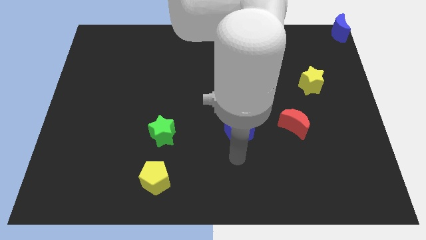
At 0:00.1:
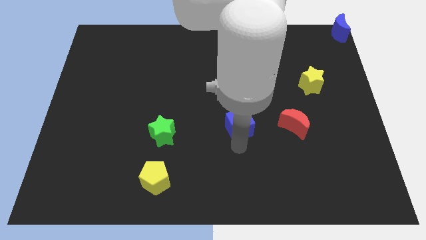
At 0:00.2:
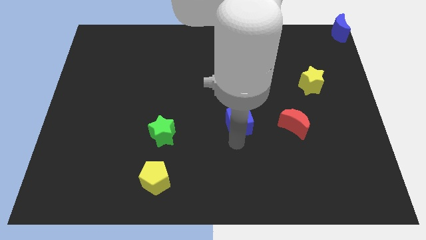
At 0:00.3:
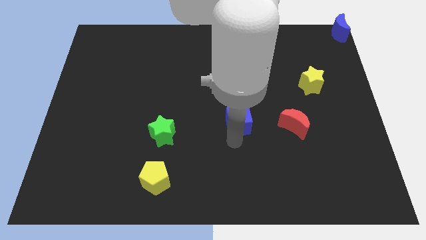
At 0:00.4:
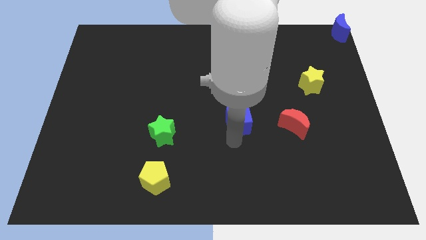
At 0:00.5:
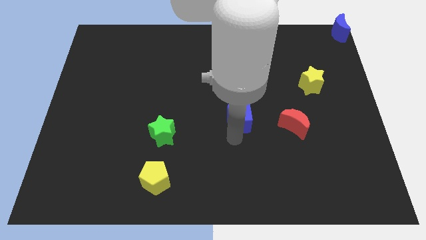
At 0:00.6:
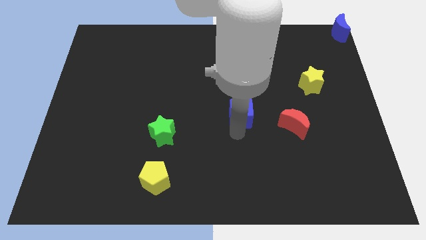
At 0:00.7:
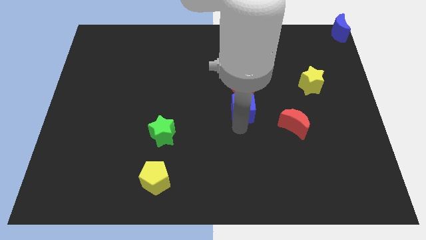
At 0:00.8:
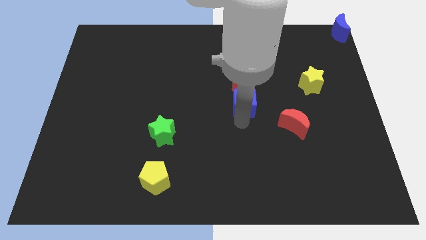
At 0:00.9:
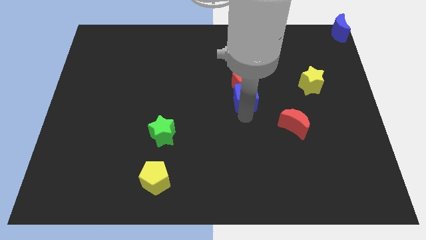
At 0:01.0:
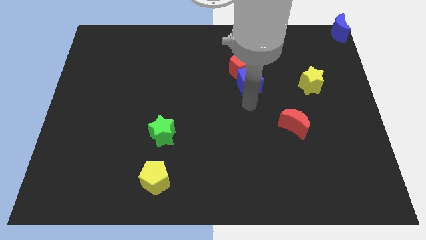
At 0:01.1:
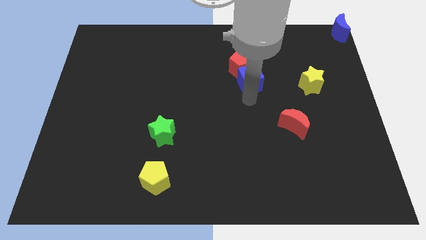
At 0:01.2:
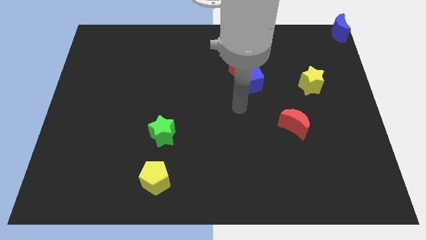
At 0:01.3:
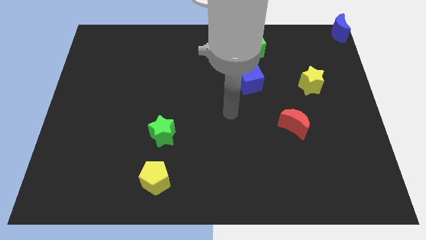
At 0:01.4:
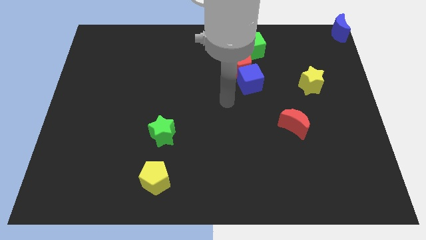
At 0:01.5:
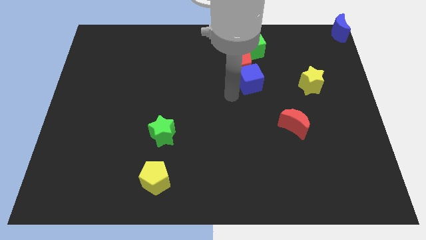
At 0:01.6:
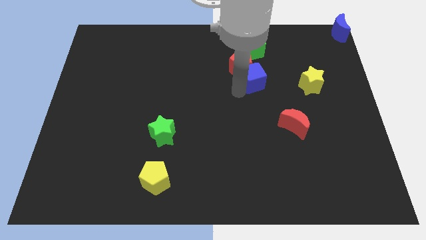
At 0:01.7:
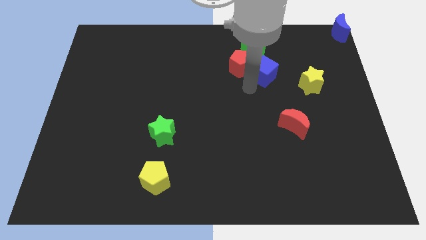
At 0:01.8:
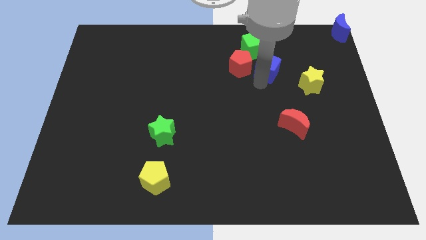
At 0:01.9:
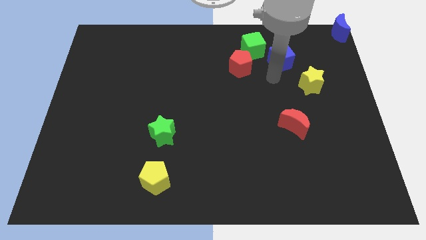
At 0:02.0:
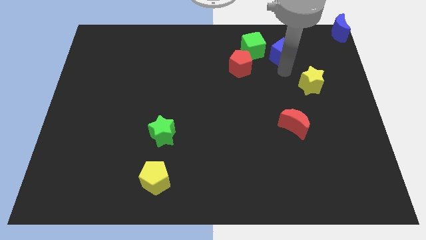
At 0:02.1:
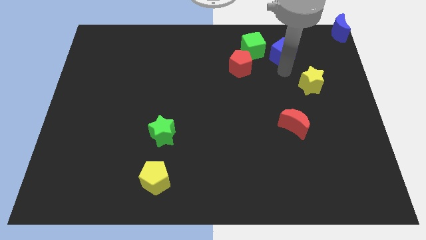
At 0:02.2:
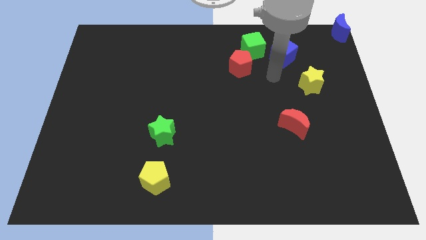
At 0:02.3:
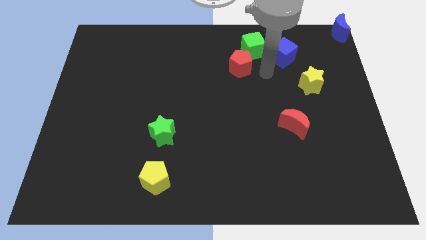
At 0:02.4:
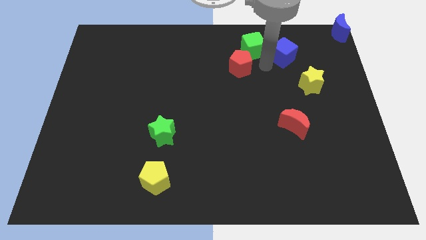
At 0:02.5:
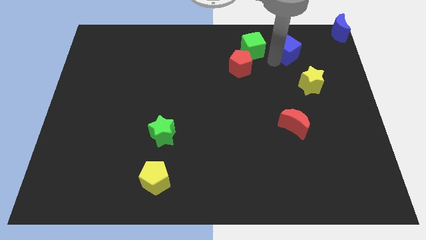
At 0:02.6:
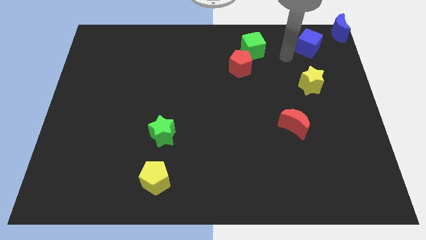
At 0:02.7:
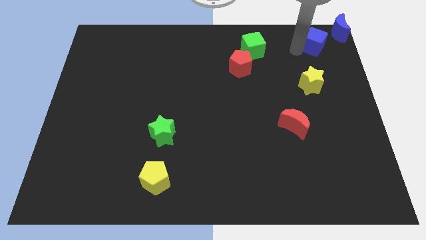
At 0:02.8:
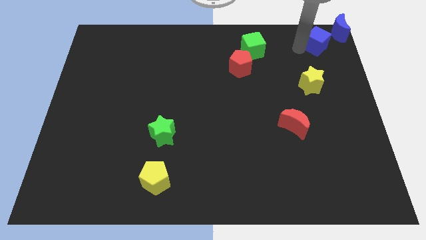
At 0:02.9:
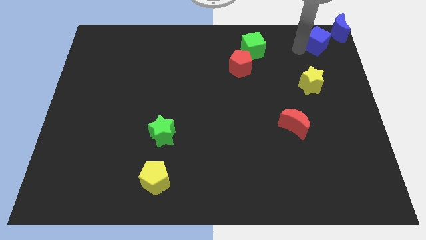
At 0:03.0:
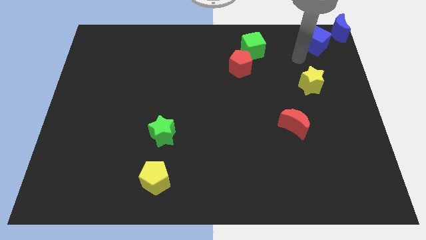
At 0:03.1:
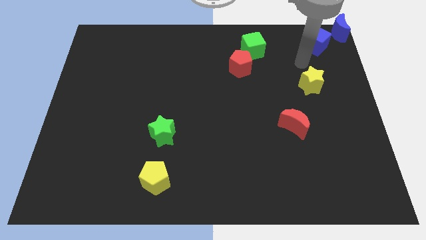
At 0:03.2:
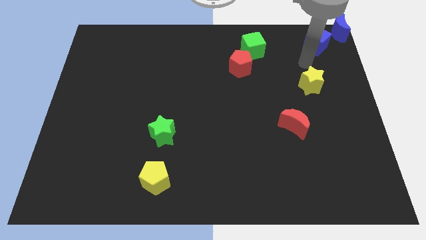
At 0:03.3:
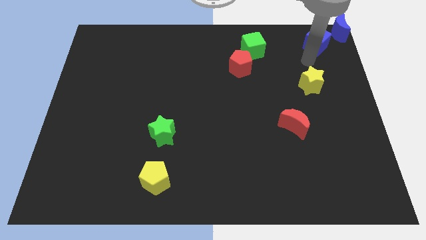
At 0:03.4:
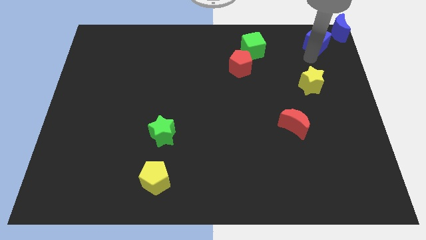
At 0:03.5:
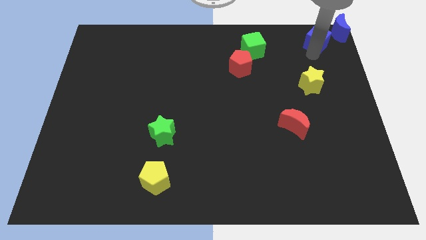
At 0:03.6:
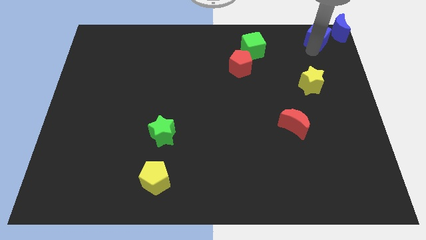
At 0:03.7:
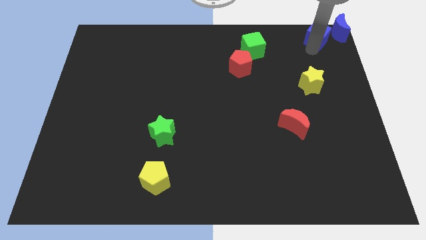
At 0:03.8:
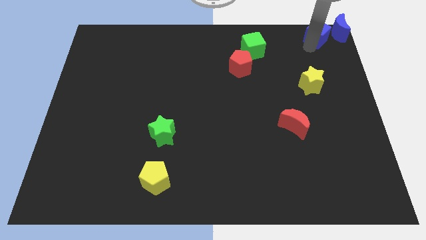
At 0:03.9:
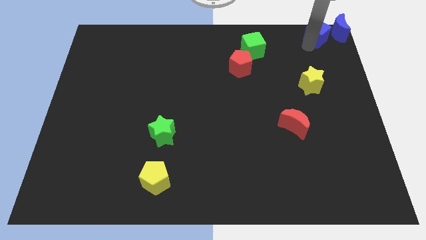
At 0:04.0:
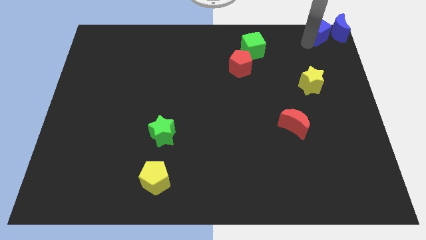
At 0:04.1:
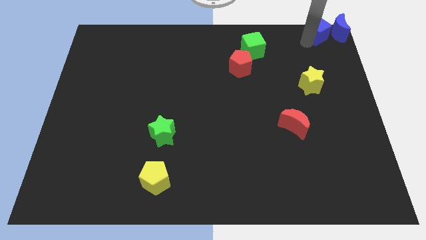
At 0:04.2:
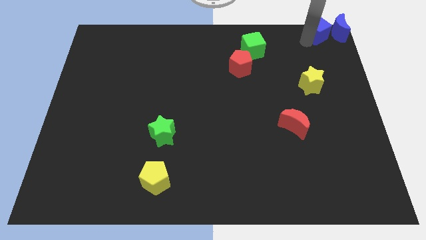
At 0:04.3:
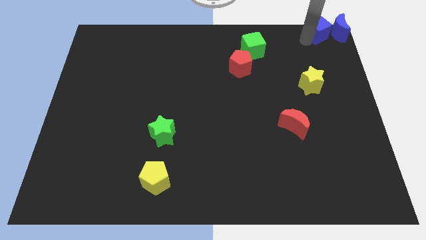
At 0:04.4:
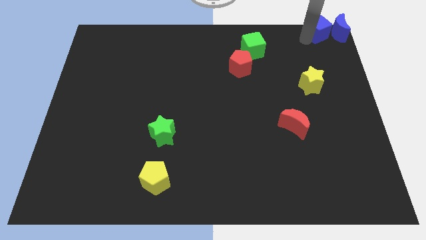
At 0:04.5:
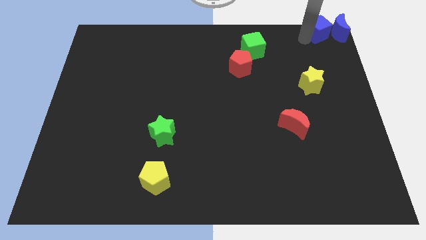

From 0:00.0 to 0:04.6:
place the blue cube to the left of blue crescent

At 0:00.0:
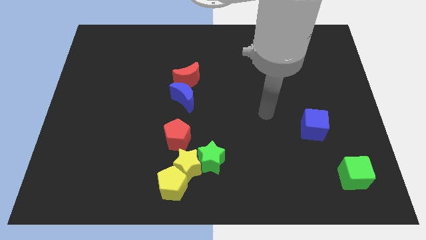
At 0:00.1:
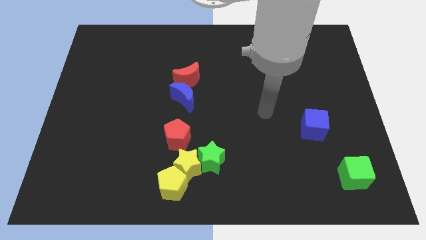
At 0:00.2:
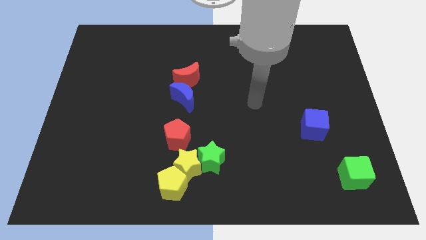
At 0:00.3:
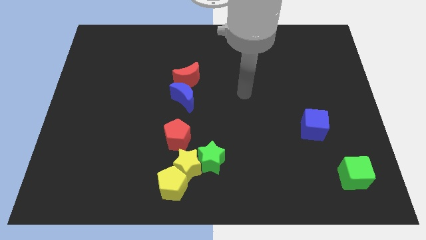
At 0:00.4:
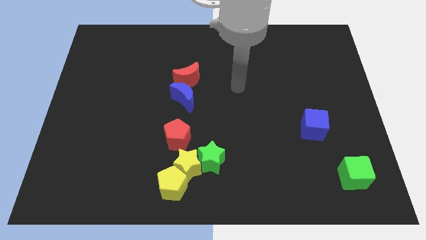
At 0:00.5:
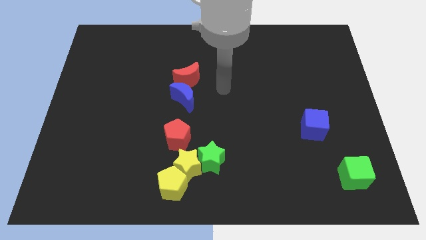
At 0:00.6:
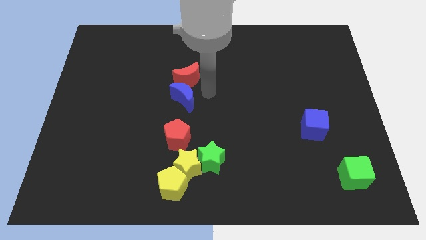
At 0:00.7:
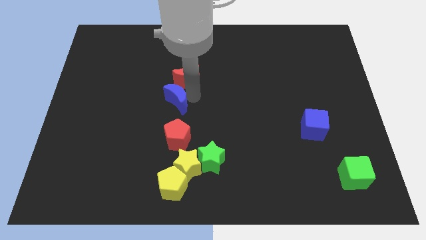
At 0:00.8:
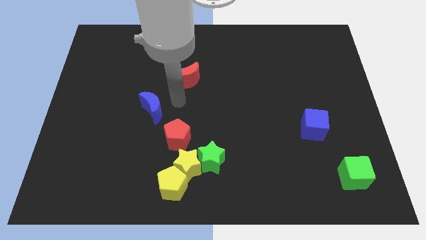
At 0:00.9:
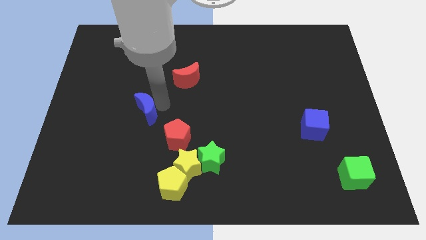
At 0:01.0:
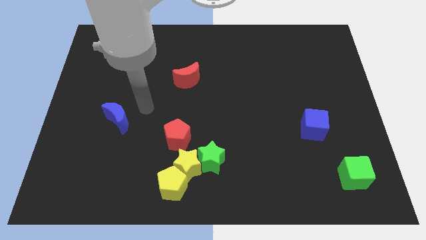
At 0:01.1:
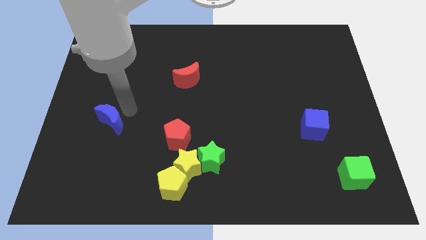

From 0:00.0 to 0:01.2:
separate the blue crescents

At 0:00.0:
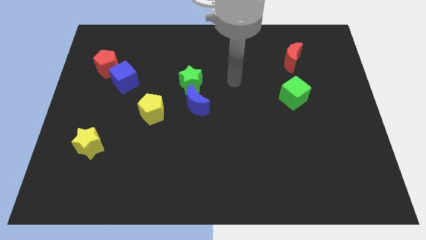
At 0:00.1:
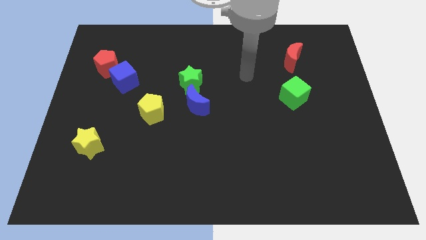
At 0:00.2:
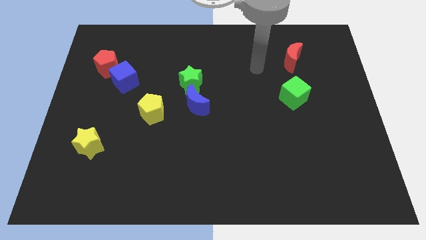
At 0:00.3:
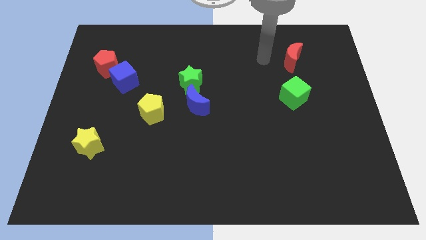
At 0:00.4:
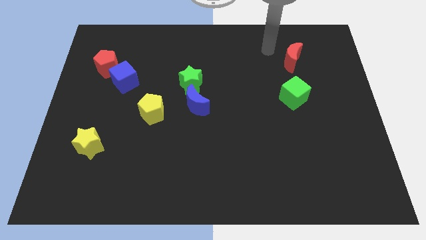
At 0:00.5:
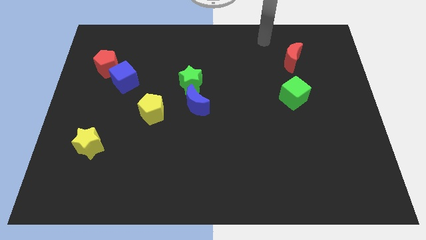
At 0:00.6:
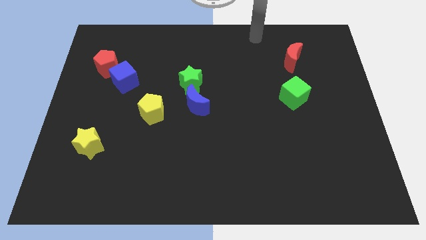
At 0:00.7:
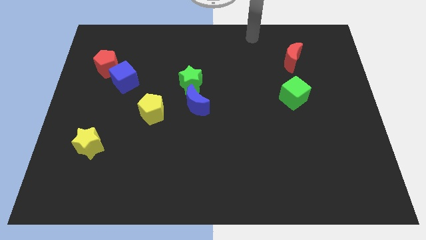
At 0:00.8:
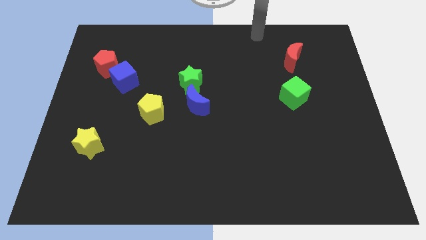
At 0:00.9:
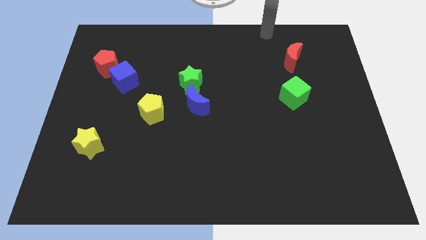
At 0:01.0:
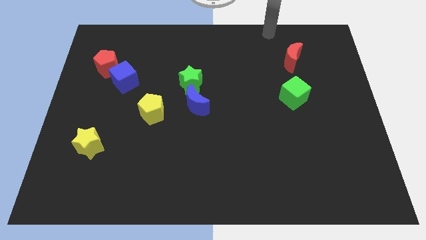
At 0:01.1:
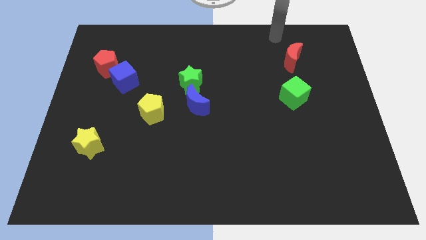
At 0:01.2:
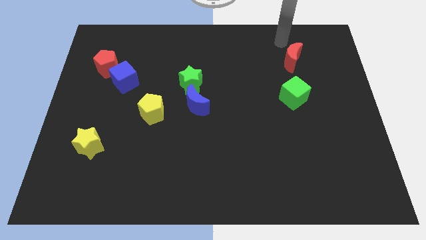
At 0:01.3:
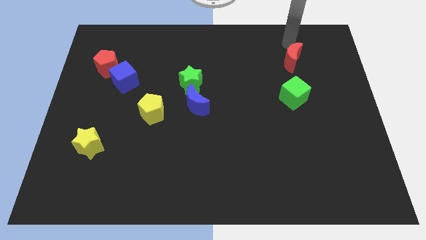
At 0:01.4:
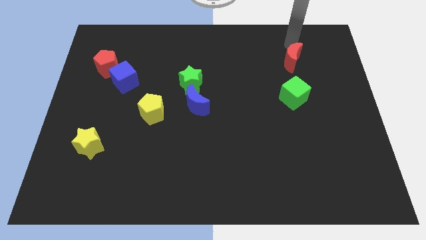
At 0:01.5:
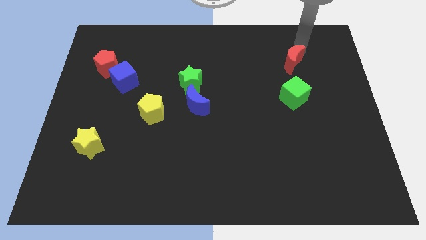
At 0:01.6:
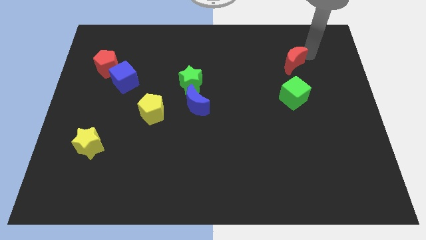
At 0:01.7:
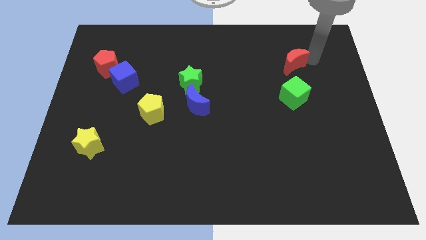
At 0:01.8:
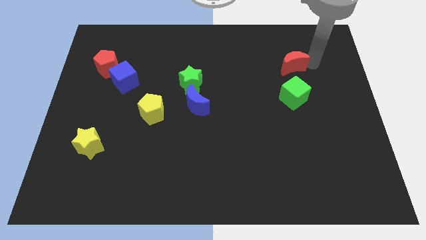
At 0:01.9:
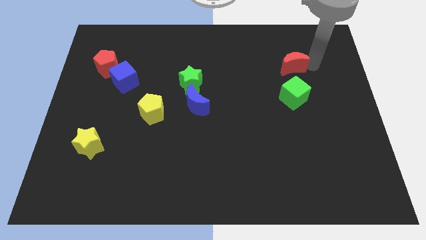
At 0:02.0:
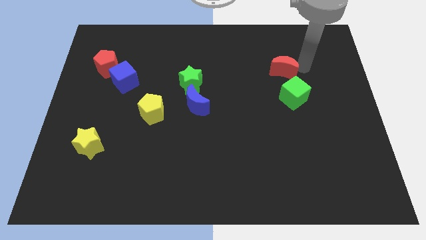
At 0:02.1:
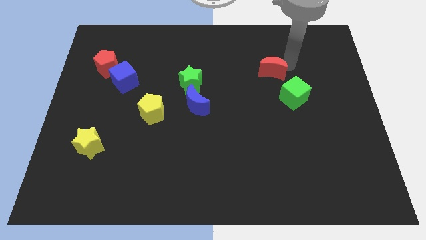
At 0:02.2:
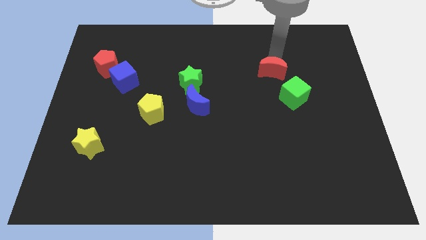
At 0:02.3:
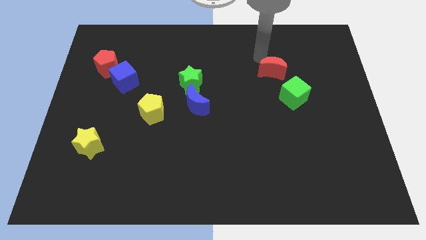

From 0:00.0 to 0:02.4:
place the red crescent to the right of the green star

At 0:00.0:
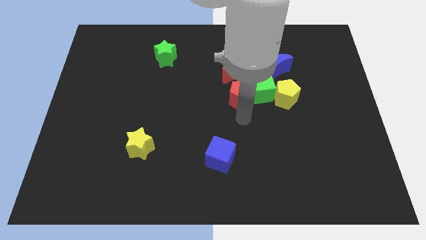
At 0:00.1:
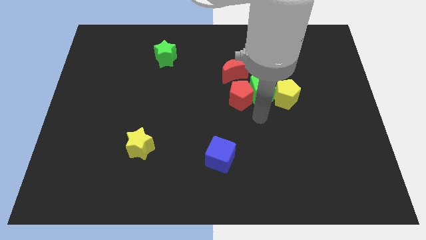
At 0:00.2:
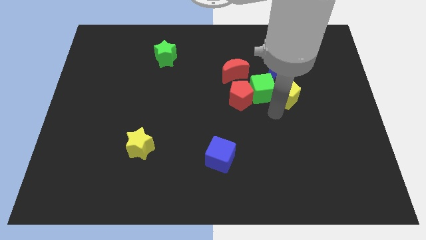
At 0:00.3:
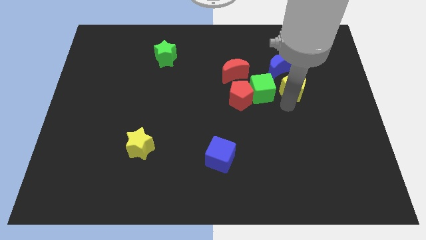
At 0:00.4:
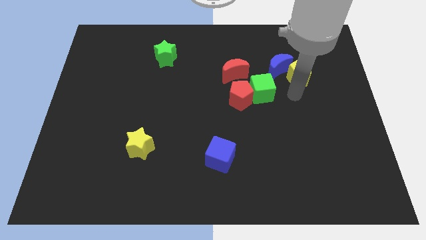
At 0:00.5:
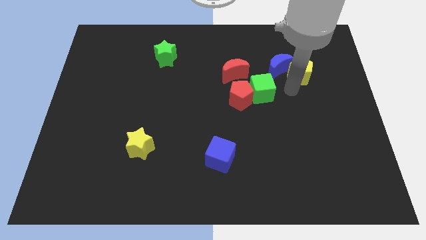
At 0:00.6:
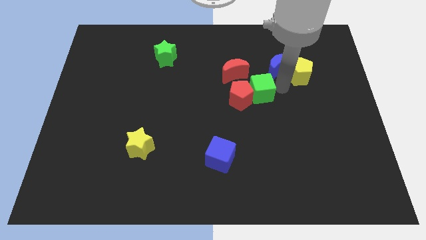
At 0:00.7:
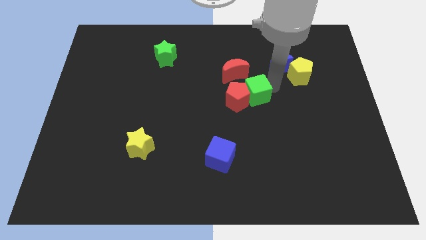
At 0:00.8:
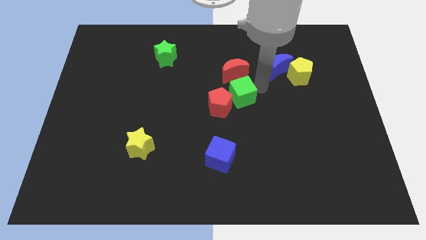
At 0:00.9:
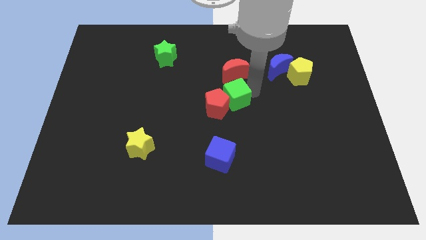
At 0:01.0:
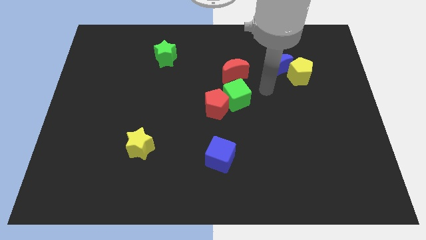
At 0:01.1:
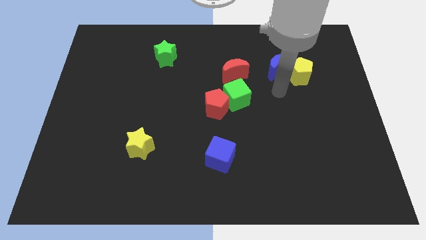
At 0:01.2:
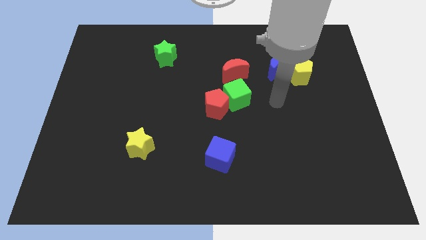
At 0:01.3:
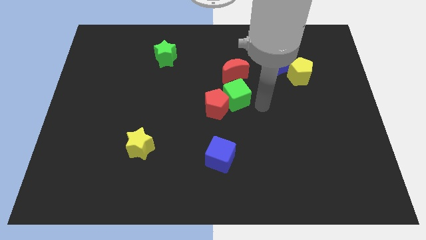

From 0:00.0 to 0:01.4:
separate the green cube and the yellow pentagon
